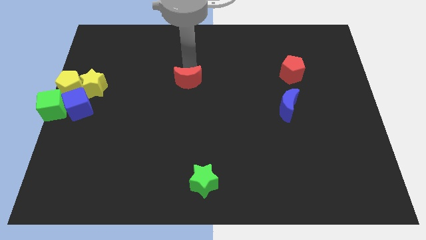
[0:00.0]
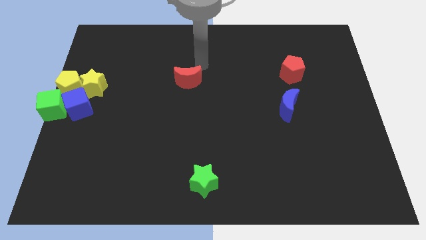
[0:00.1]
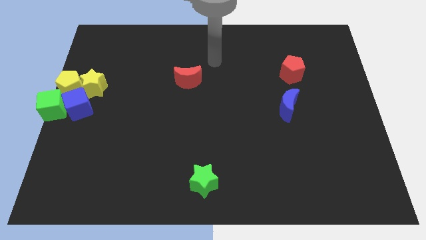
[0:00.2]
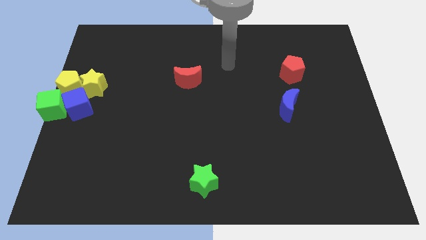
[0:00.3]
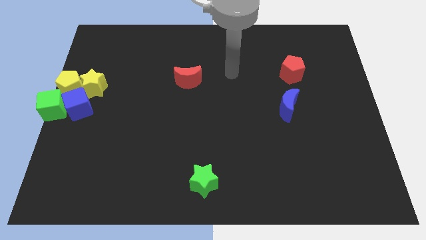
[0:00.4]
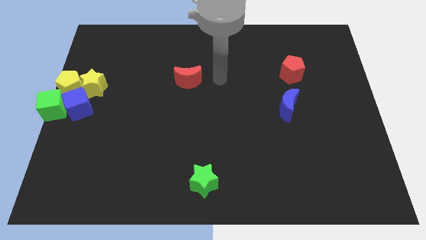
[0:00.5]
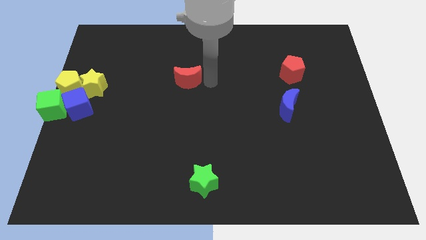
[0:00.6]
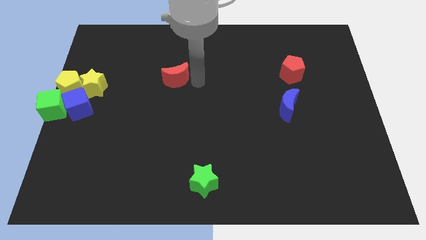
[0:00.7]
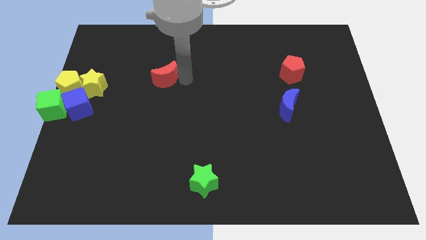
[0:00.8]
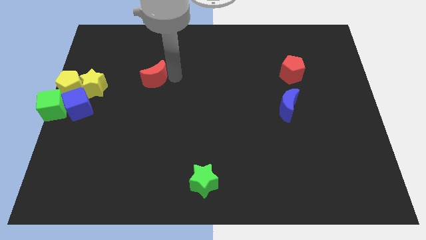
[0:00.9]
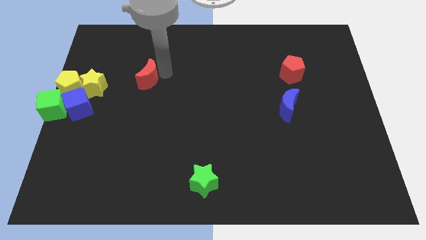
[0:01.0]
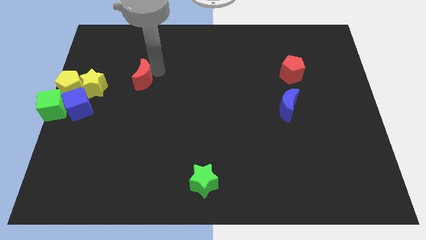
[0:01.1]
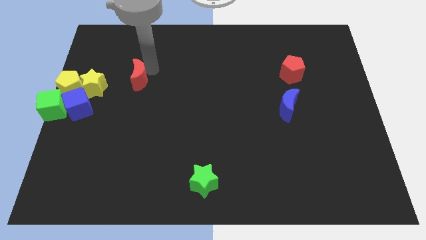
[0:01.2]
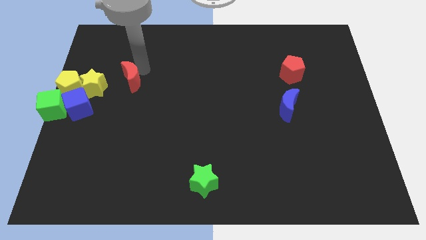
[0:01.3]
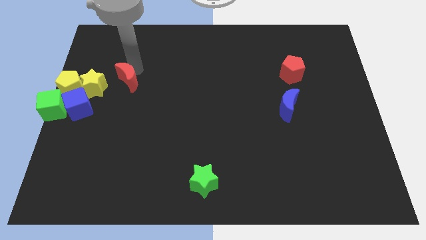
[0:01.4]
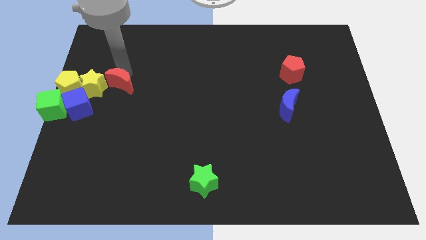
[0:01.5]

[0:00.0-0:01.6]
push the red moon into the yellow star

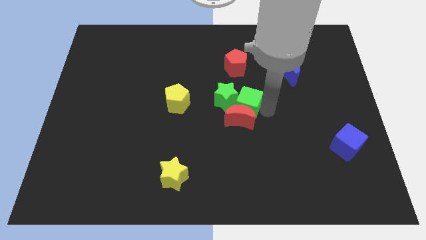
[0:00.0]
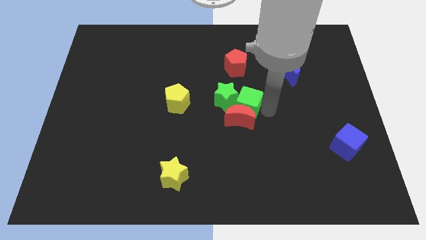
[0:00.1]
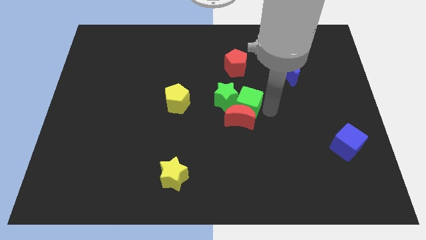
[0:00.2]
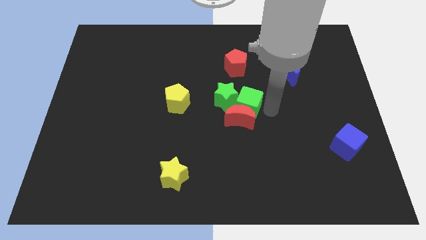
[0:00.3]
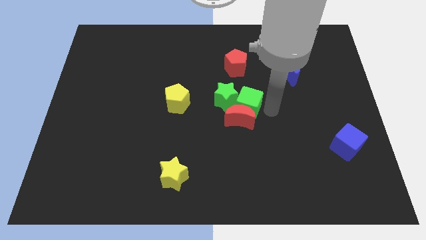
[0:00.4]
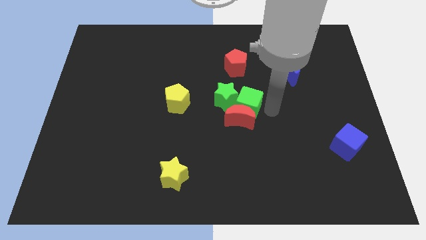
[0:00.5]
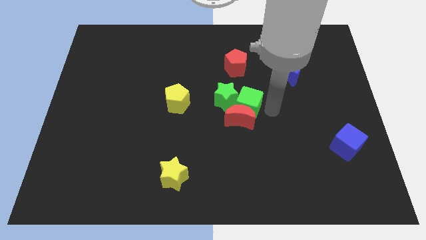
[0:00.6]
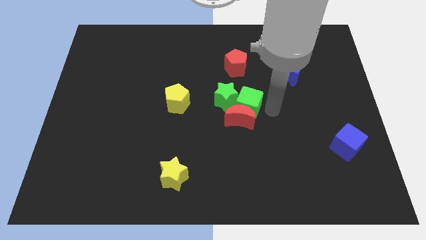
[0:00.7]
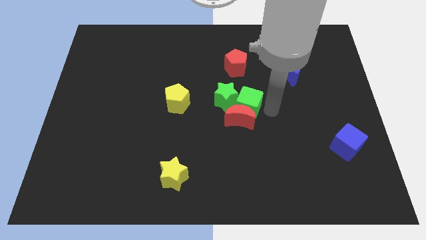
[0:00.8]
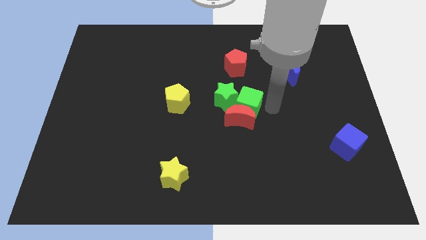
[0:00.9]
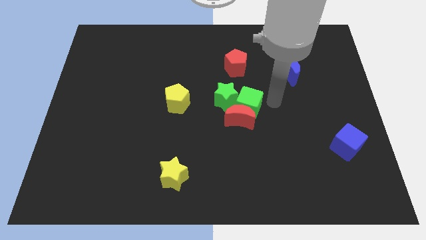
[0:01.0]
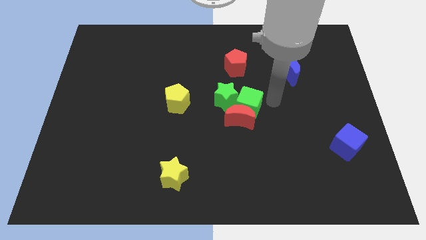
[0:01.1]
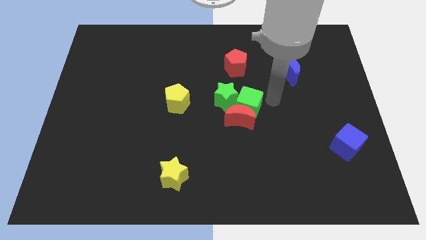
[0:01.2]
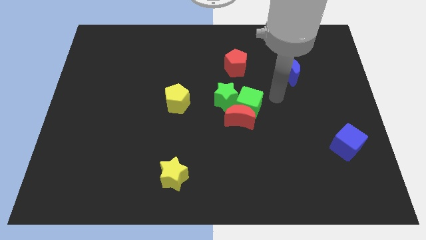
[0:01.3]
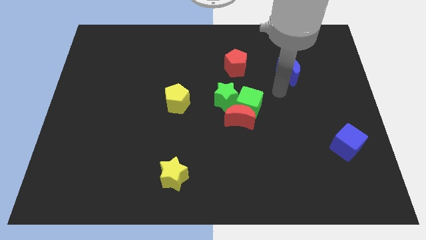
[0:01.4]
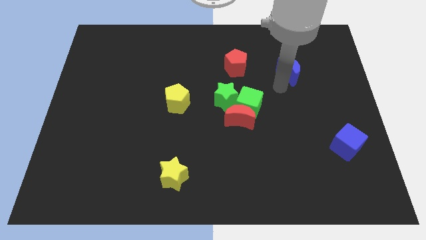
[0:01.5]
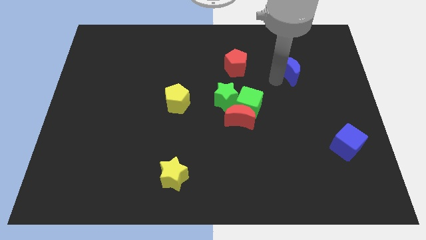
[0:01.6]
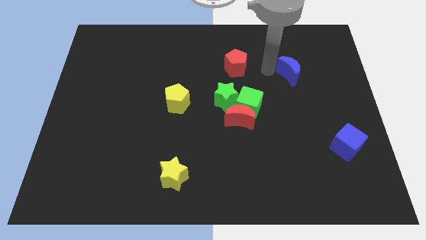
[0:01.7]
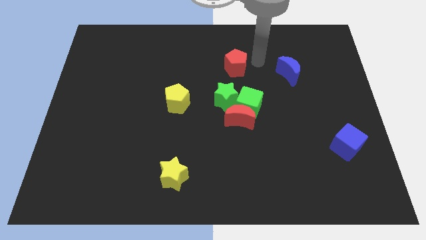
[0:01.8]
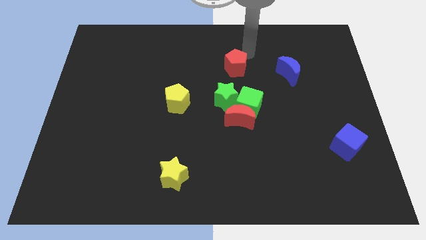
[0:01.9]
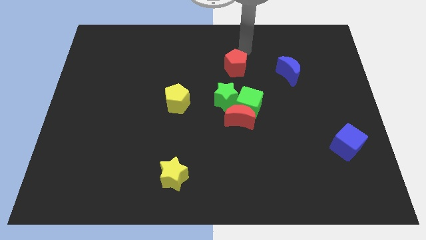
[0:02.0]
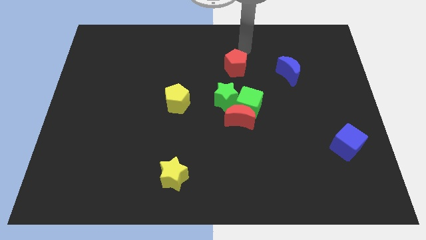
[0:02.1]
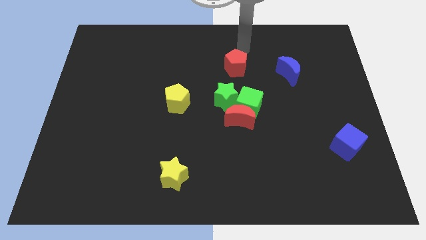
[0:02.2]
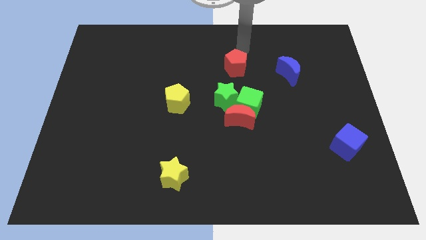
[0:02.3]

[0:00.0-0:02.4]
move the arm away from the green cube

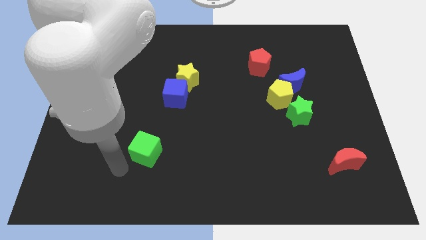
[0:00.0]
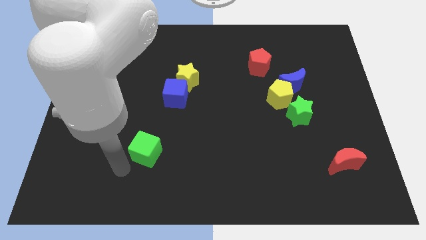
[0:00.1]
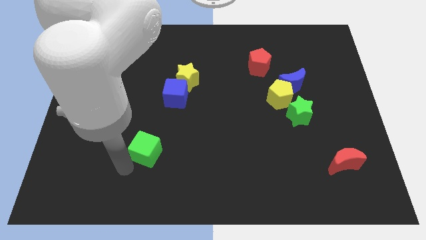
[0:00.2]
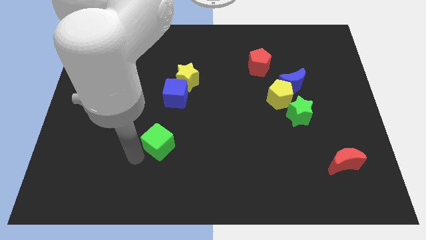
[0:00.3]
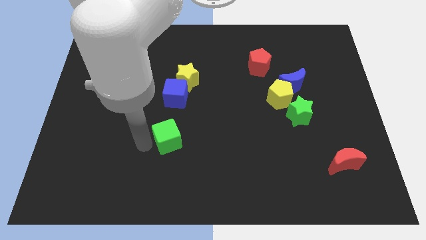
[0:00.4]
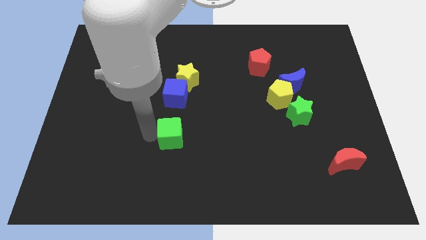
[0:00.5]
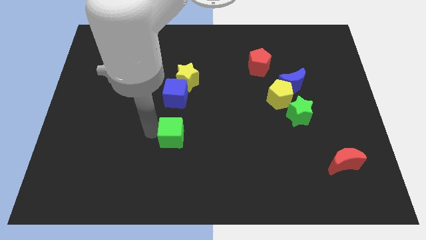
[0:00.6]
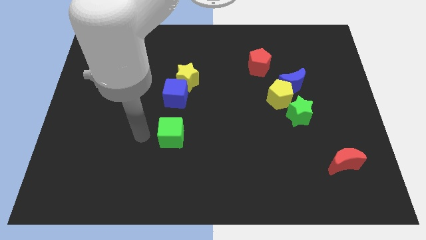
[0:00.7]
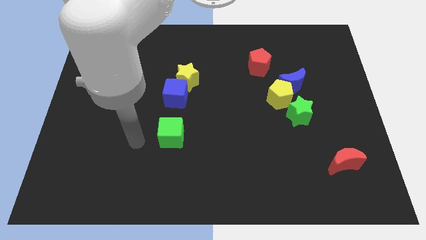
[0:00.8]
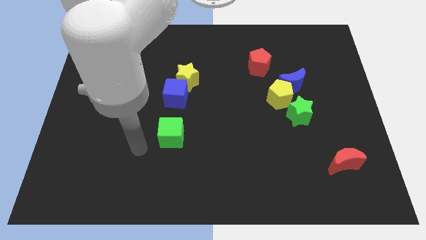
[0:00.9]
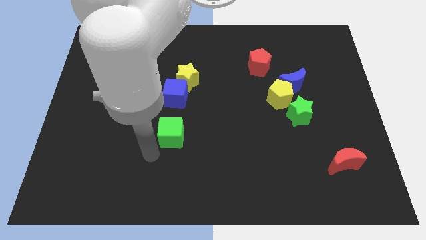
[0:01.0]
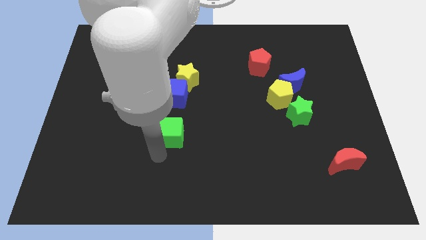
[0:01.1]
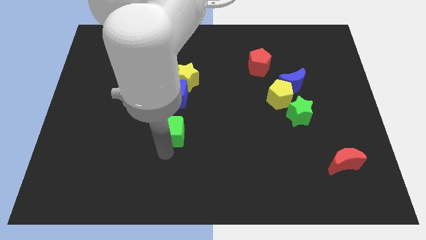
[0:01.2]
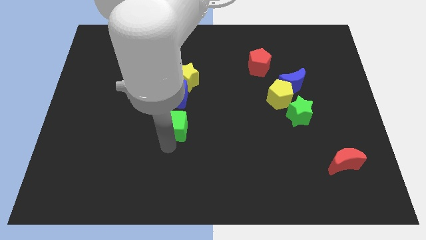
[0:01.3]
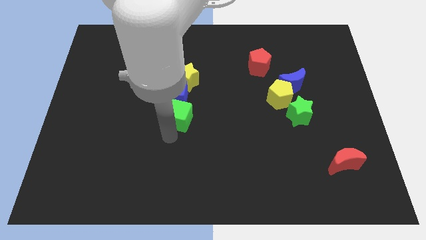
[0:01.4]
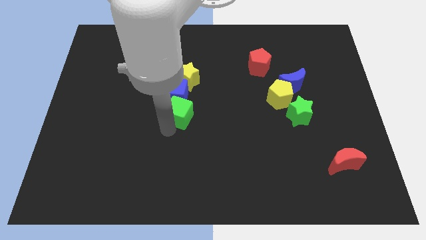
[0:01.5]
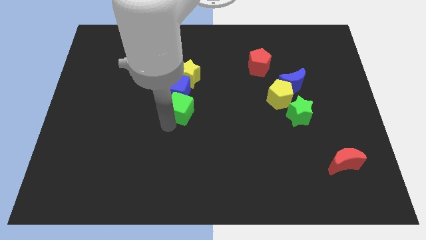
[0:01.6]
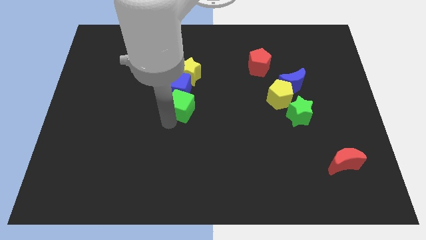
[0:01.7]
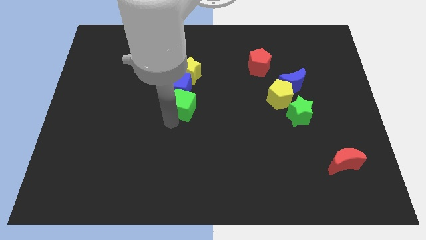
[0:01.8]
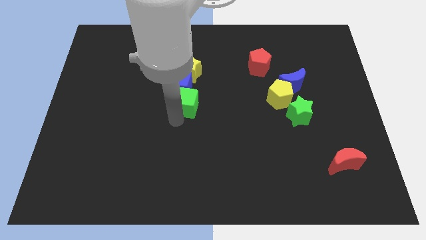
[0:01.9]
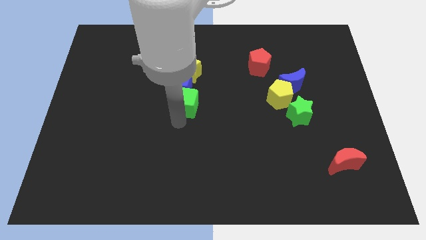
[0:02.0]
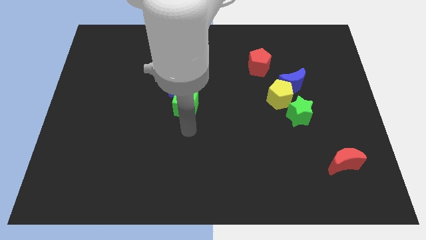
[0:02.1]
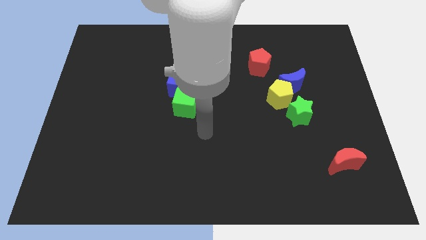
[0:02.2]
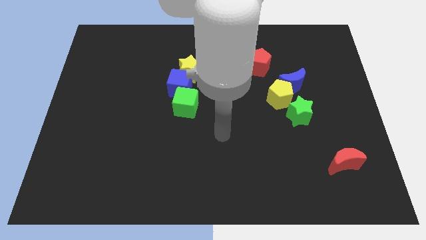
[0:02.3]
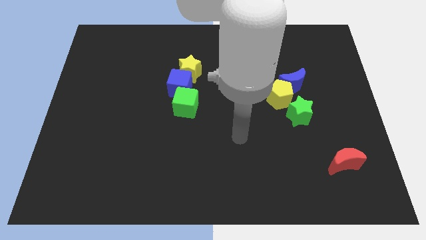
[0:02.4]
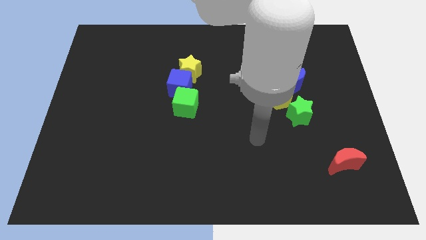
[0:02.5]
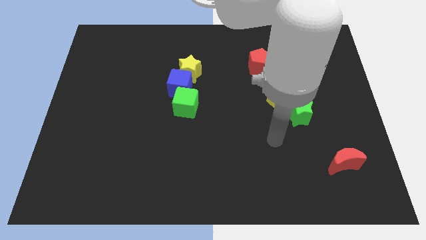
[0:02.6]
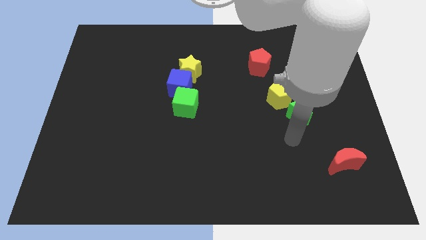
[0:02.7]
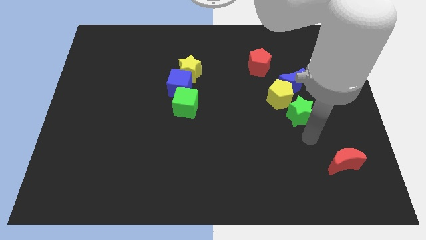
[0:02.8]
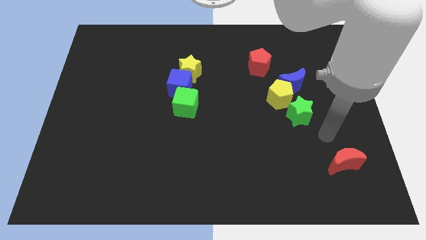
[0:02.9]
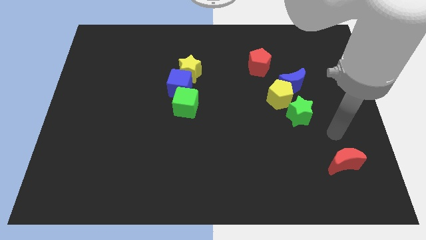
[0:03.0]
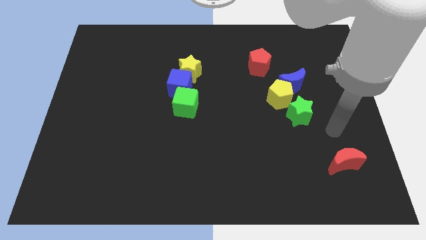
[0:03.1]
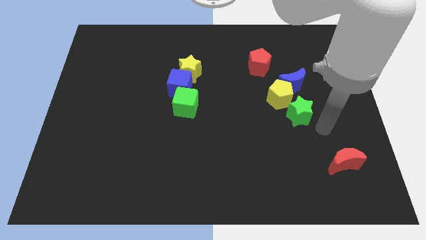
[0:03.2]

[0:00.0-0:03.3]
move the green cube to the bottom side of the blue cube

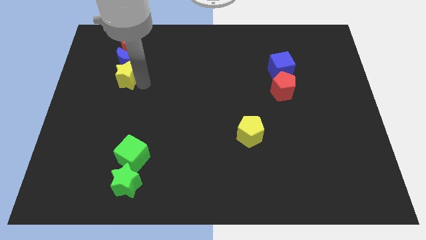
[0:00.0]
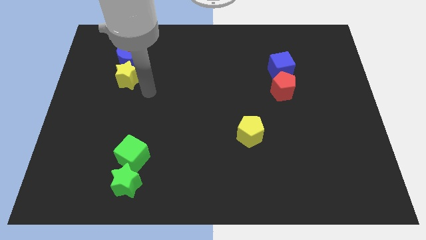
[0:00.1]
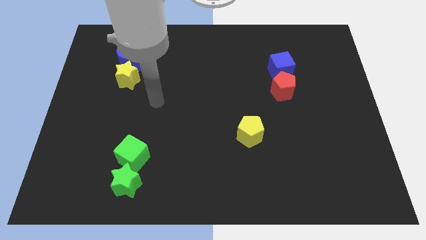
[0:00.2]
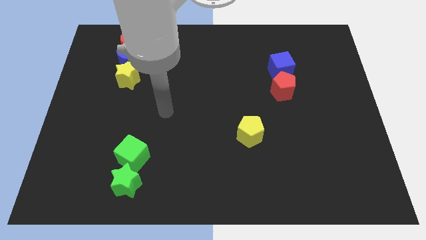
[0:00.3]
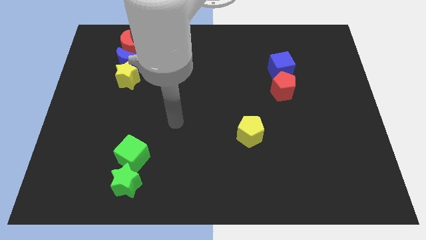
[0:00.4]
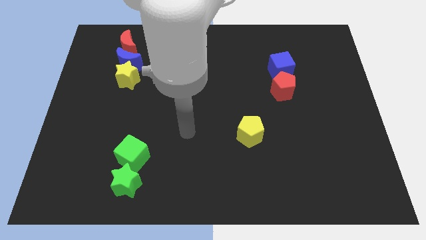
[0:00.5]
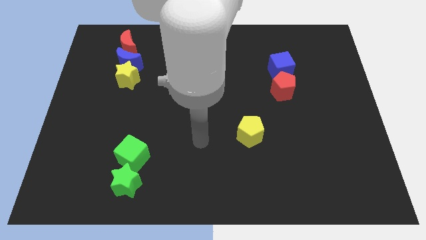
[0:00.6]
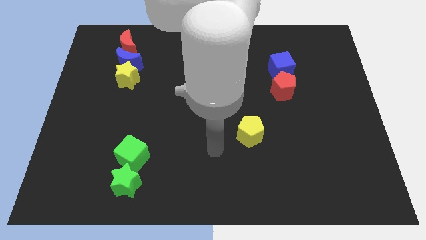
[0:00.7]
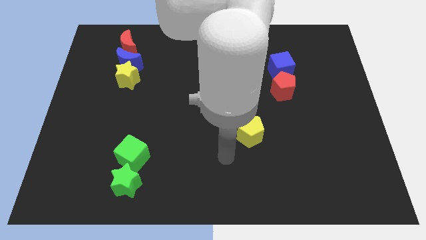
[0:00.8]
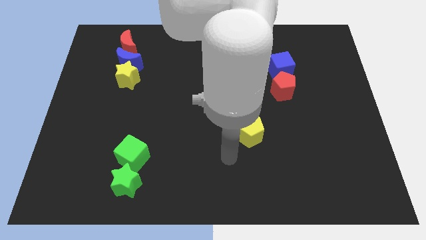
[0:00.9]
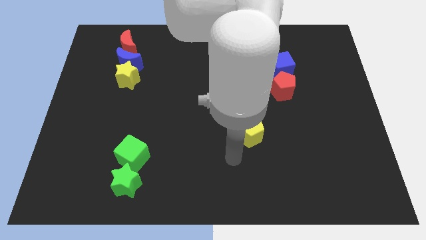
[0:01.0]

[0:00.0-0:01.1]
move yourself away from the yellow star

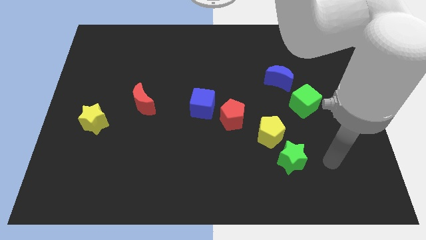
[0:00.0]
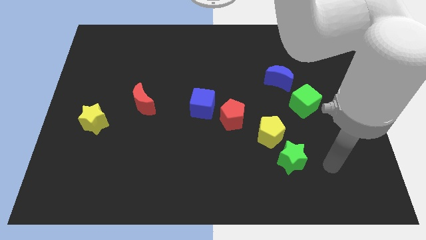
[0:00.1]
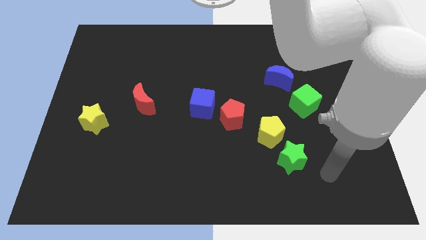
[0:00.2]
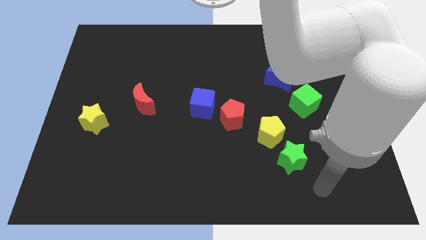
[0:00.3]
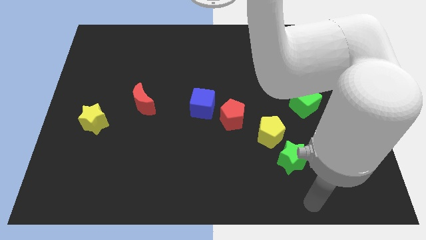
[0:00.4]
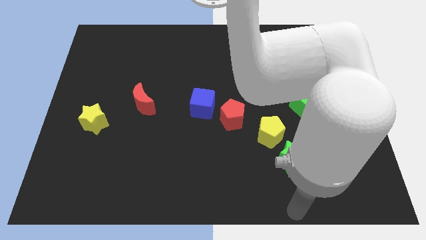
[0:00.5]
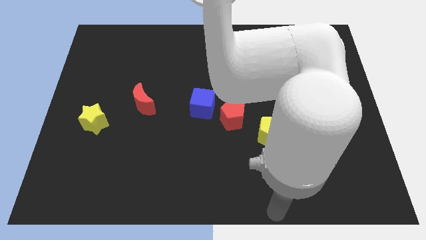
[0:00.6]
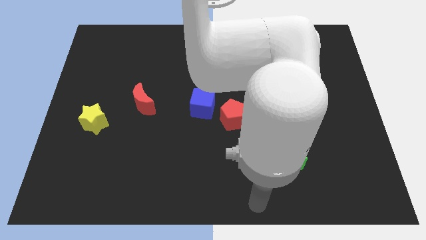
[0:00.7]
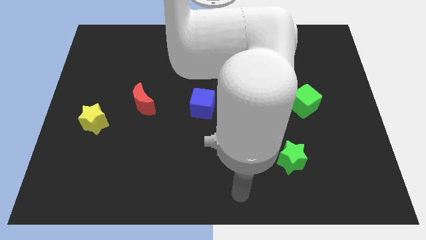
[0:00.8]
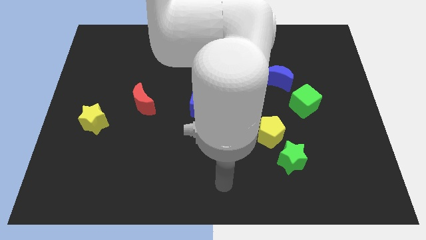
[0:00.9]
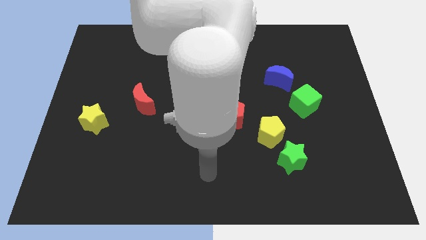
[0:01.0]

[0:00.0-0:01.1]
move your arm to the left of green star
